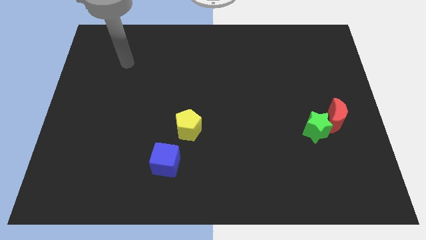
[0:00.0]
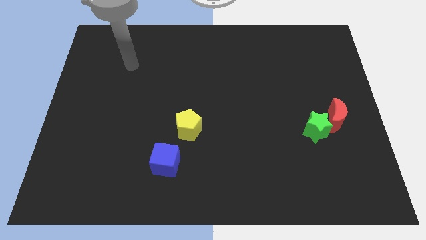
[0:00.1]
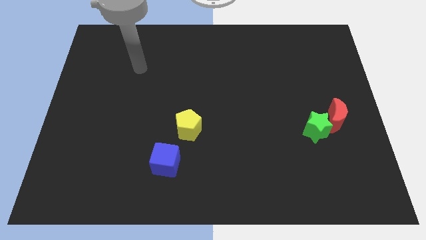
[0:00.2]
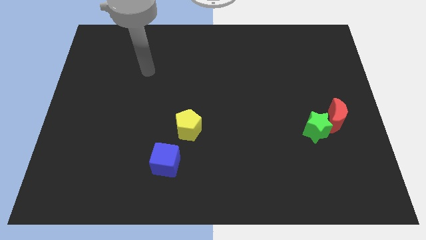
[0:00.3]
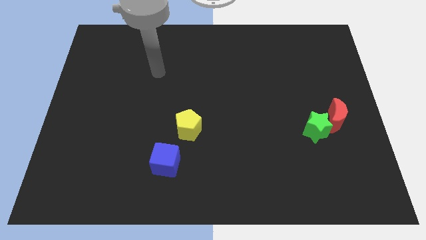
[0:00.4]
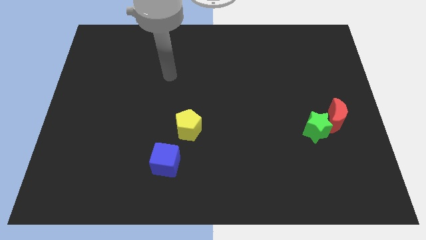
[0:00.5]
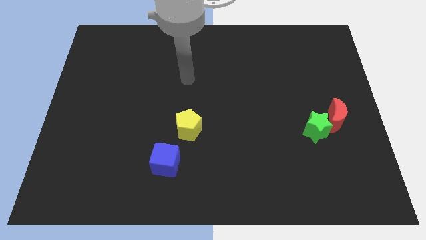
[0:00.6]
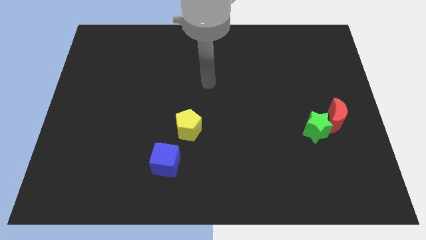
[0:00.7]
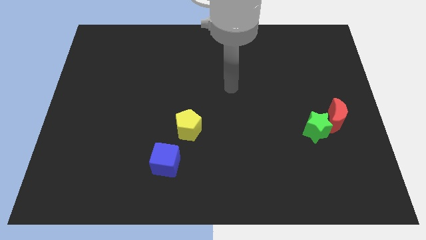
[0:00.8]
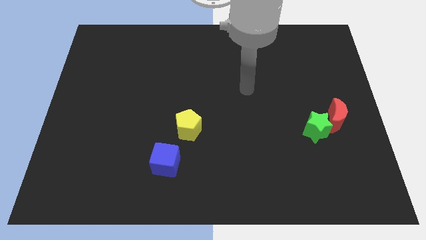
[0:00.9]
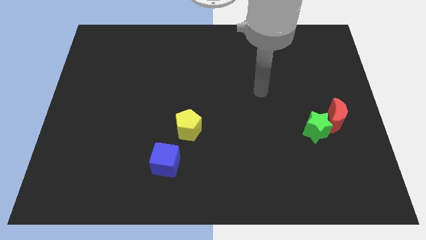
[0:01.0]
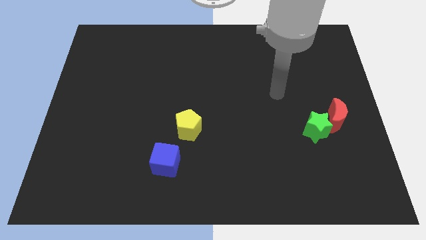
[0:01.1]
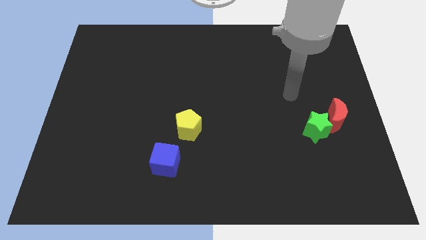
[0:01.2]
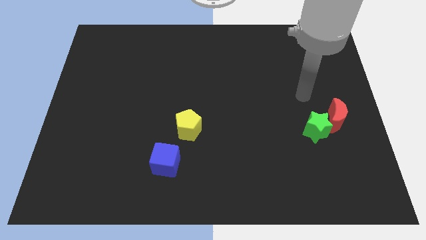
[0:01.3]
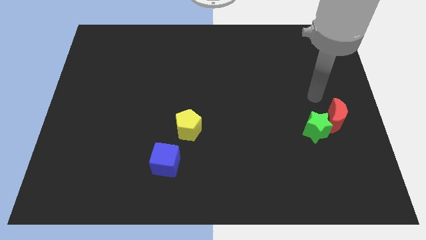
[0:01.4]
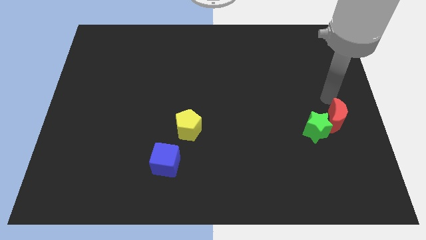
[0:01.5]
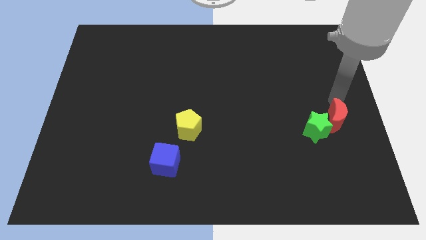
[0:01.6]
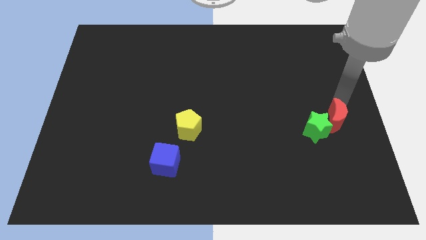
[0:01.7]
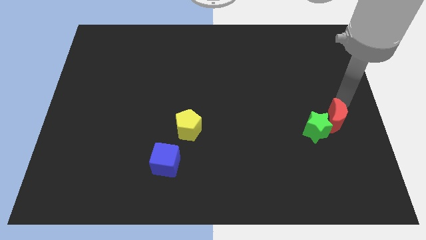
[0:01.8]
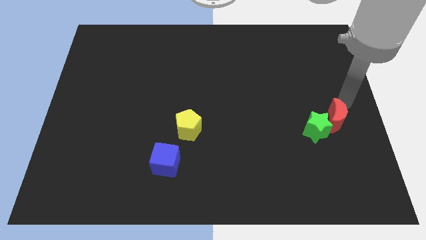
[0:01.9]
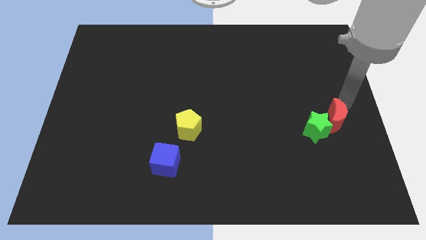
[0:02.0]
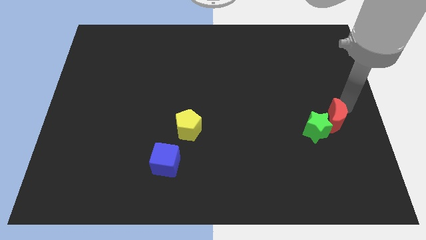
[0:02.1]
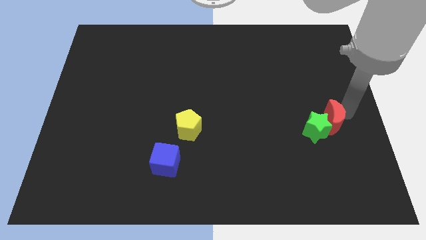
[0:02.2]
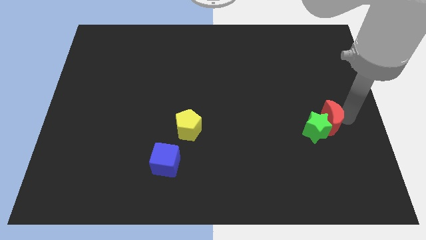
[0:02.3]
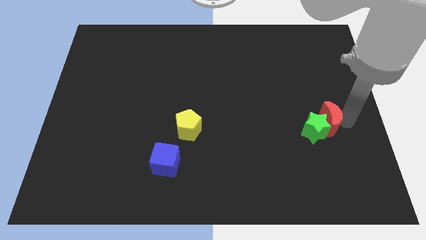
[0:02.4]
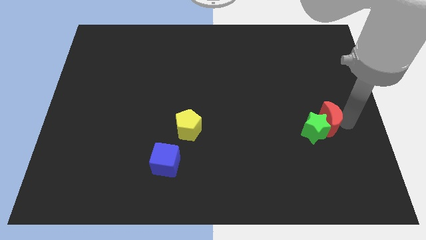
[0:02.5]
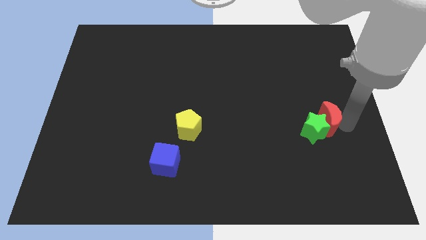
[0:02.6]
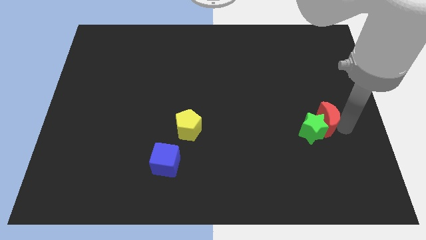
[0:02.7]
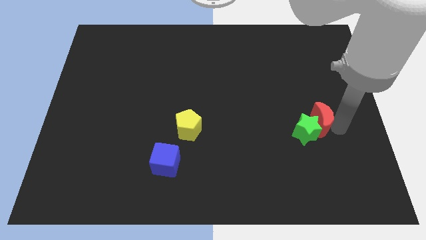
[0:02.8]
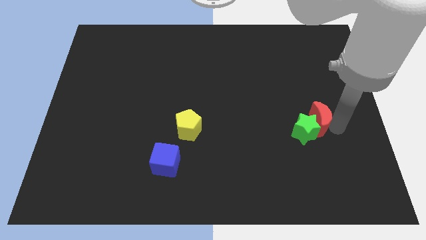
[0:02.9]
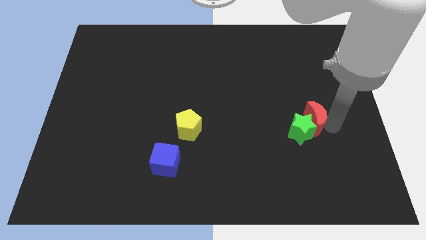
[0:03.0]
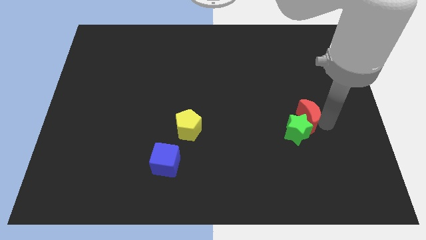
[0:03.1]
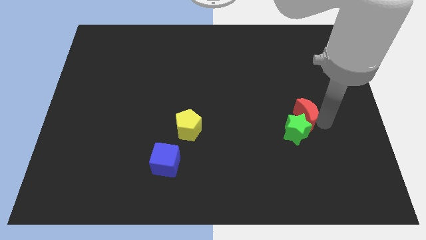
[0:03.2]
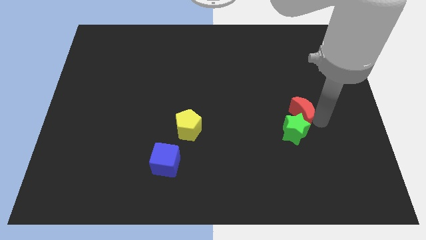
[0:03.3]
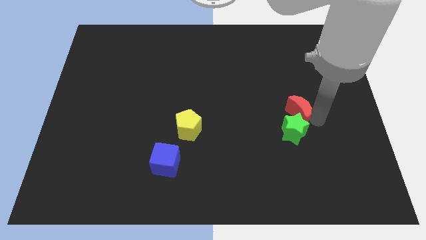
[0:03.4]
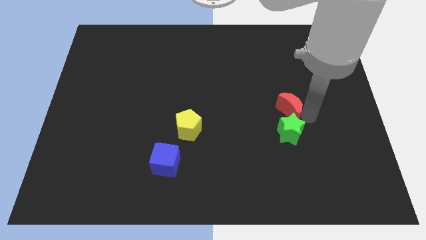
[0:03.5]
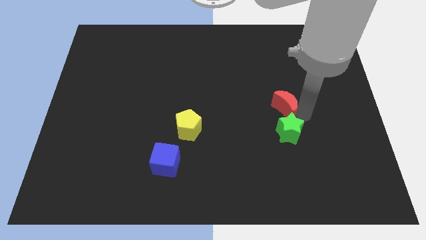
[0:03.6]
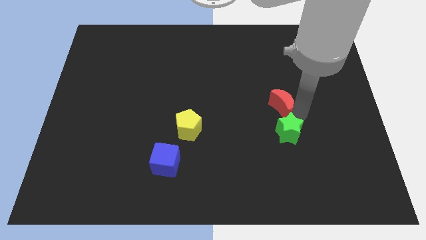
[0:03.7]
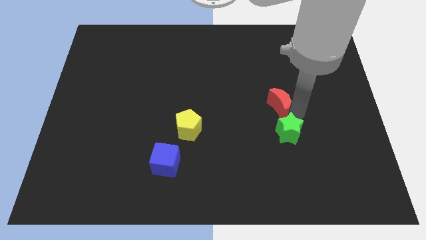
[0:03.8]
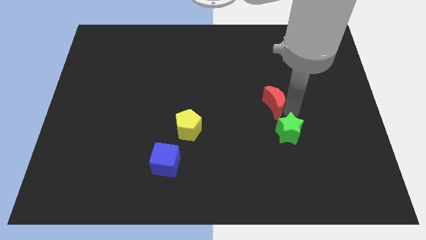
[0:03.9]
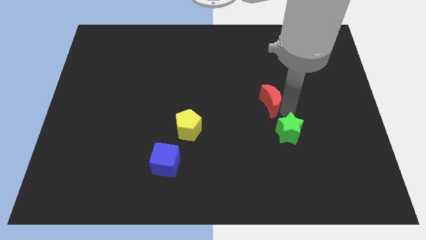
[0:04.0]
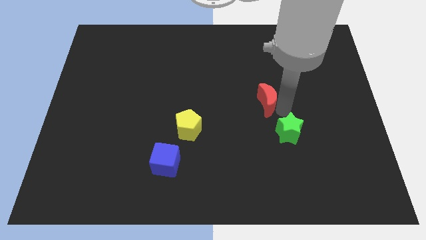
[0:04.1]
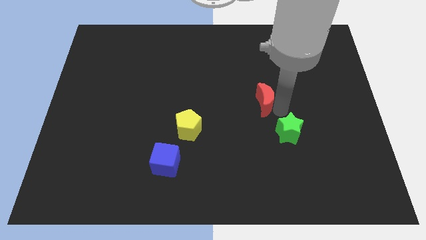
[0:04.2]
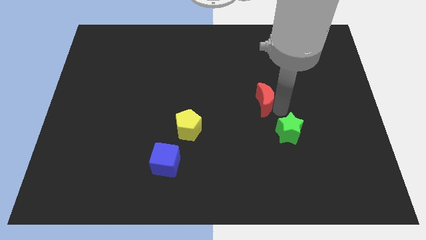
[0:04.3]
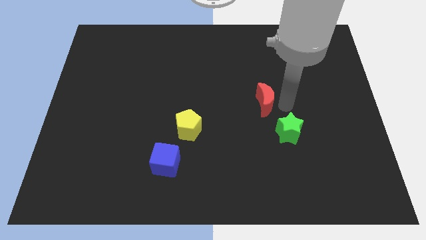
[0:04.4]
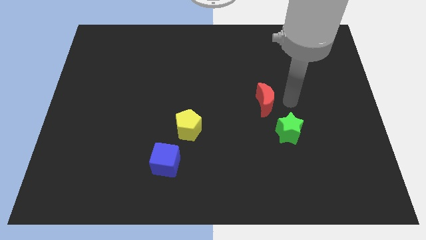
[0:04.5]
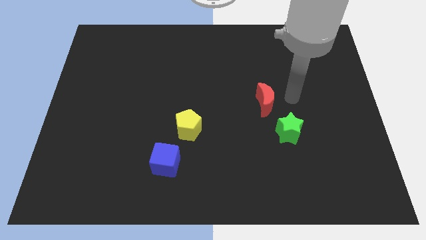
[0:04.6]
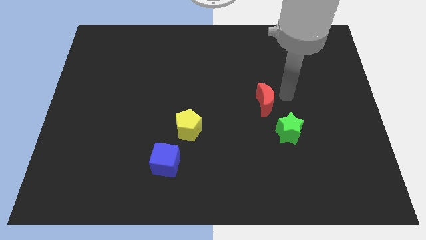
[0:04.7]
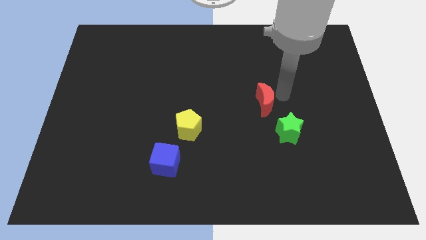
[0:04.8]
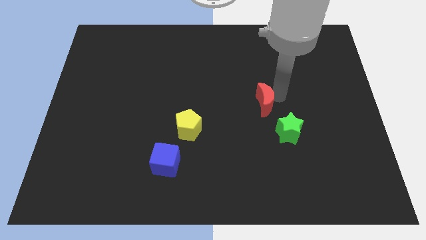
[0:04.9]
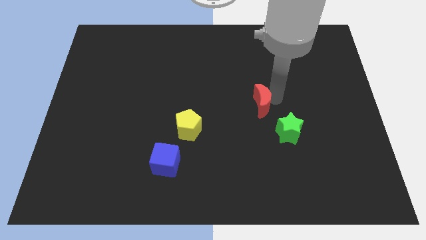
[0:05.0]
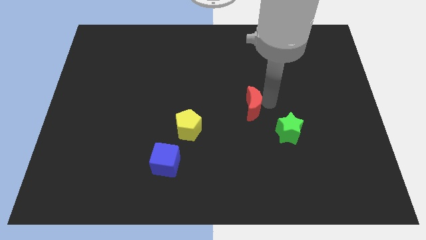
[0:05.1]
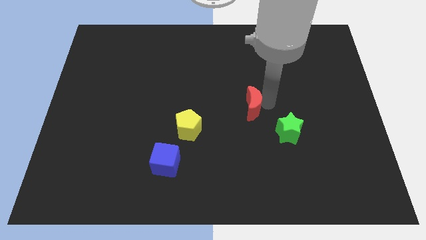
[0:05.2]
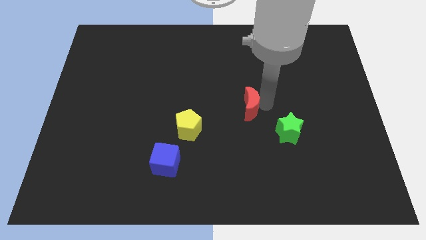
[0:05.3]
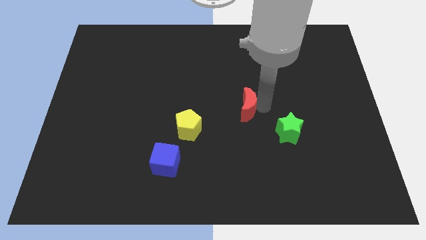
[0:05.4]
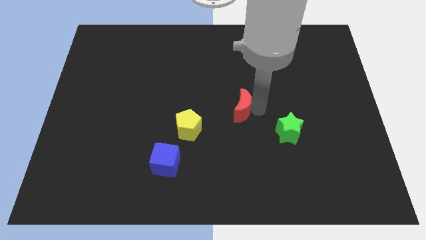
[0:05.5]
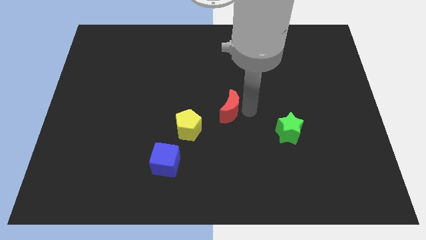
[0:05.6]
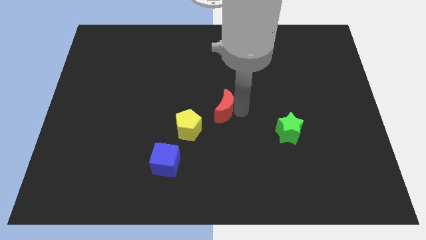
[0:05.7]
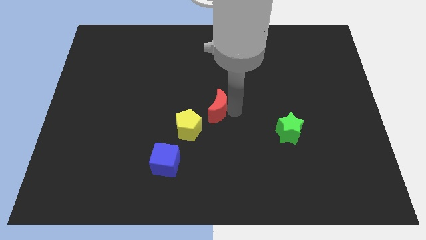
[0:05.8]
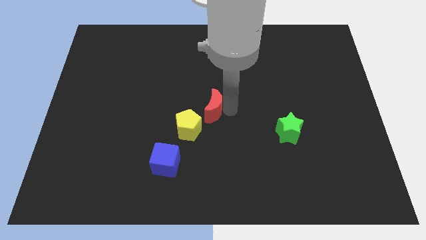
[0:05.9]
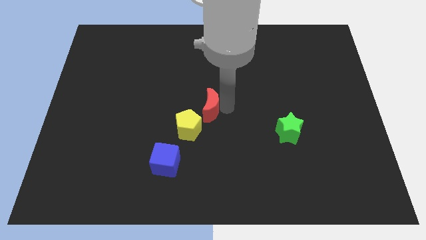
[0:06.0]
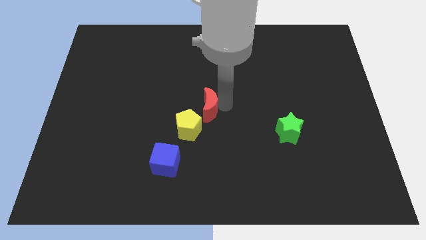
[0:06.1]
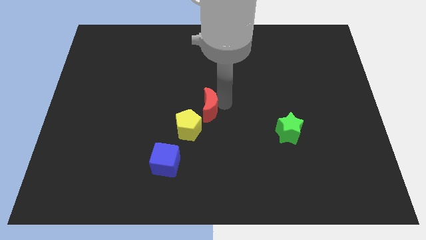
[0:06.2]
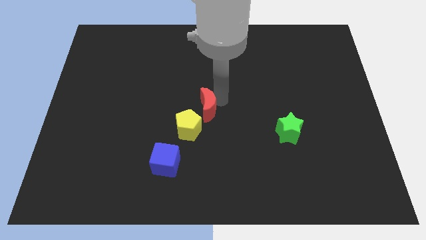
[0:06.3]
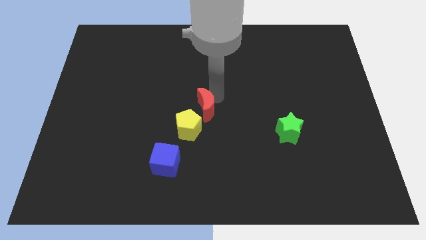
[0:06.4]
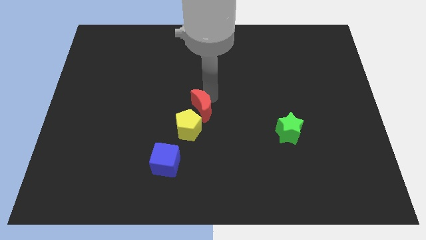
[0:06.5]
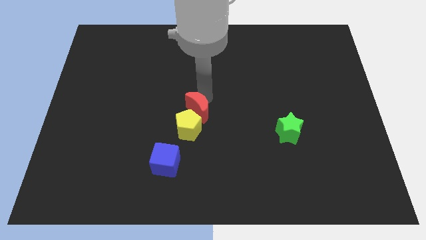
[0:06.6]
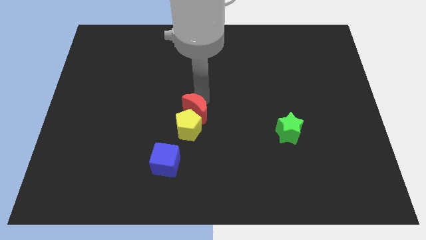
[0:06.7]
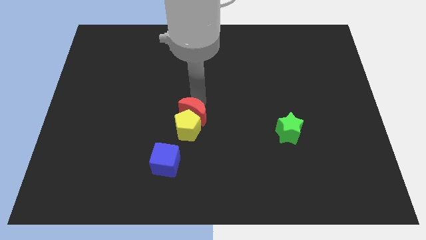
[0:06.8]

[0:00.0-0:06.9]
put the red block next to the pentagon

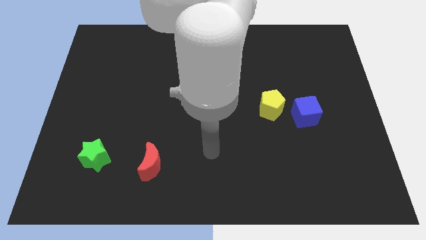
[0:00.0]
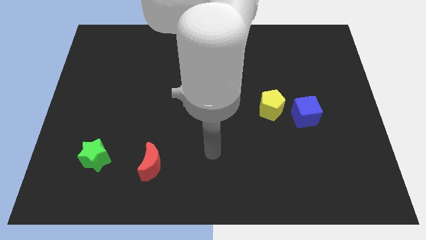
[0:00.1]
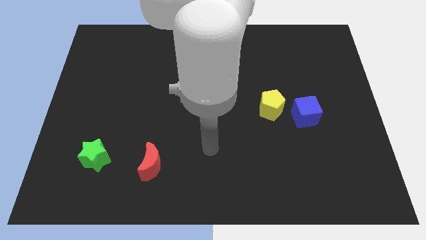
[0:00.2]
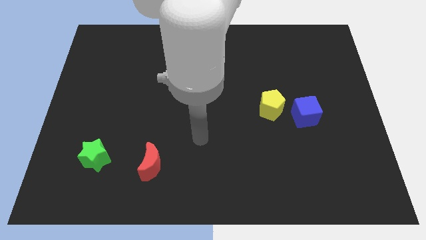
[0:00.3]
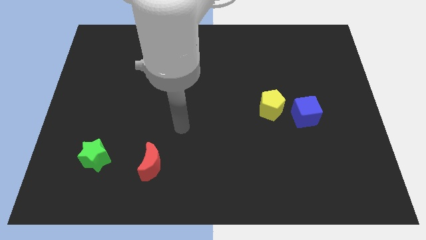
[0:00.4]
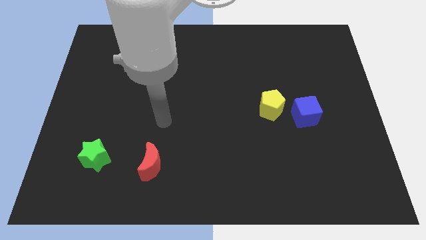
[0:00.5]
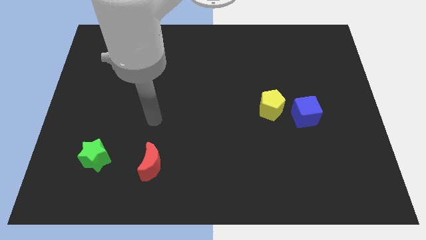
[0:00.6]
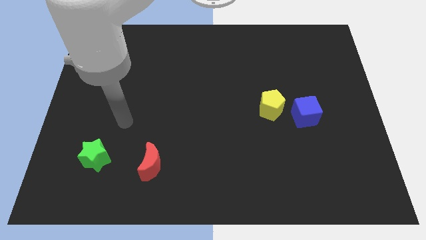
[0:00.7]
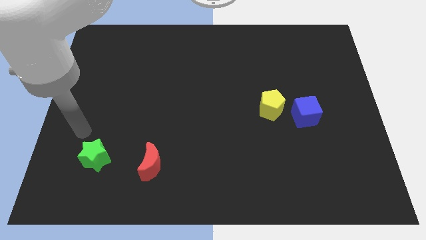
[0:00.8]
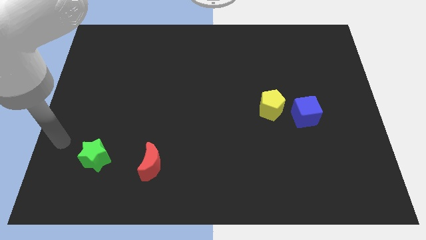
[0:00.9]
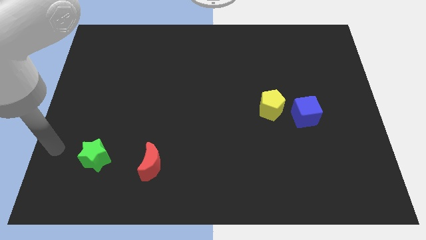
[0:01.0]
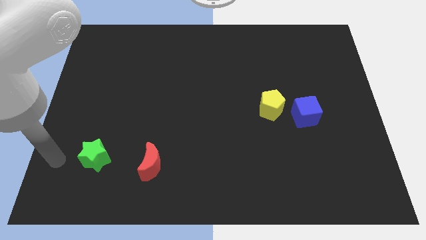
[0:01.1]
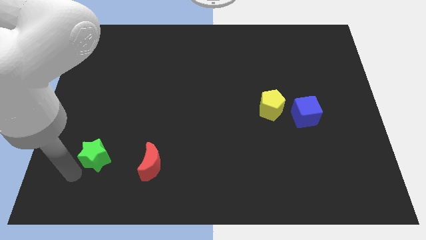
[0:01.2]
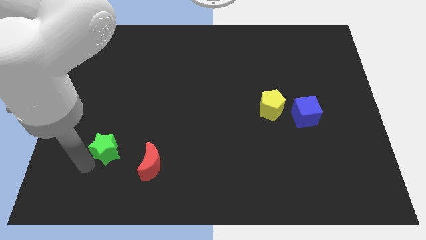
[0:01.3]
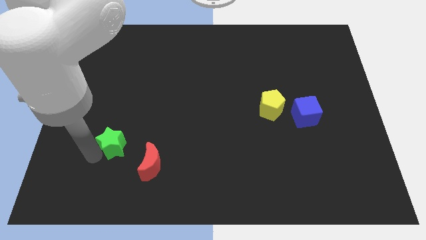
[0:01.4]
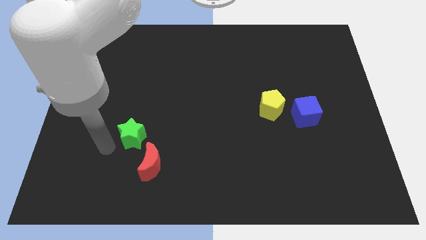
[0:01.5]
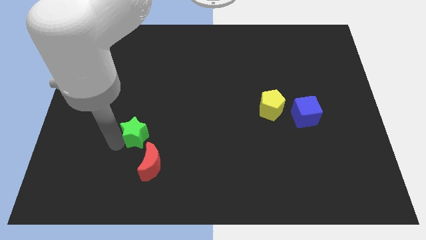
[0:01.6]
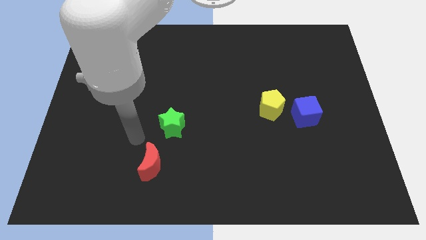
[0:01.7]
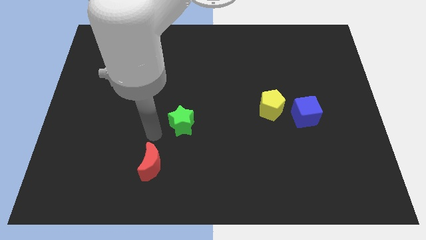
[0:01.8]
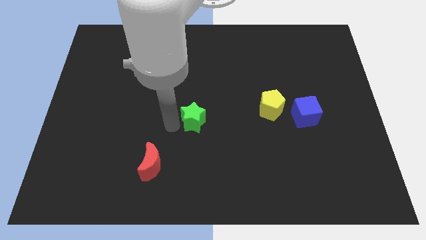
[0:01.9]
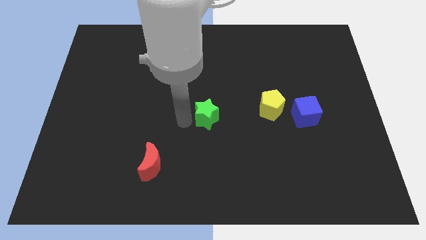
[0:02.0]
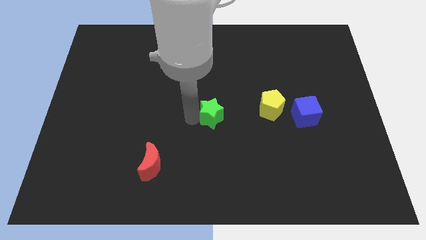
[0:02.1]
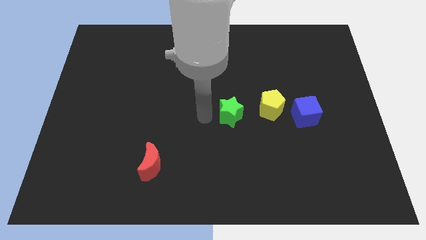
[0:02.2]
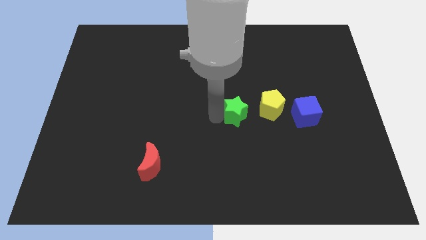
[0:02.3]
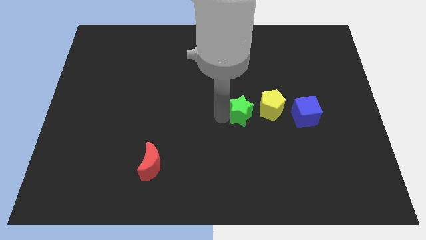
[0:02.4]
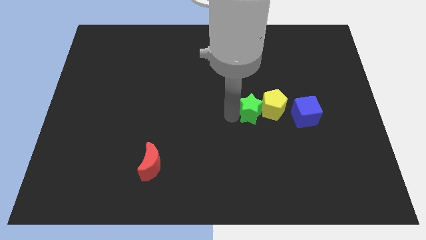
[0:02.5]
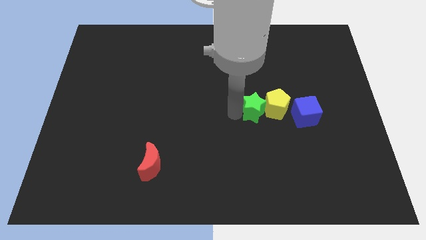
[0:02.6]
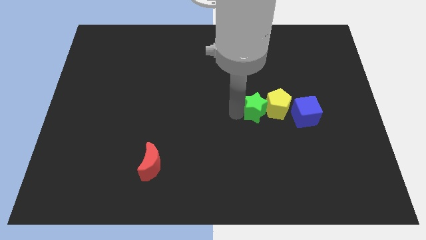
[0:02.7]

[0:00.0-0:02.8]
put the green star next to the yellow pentagon
